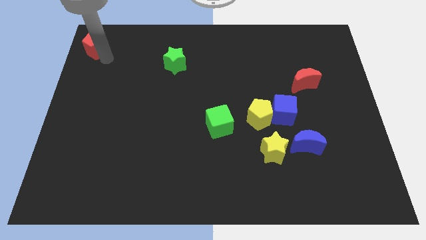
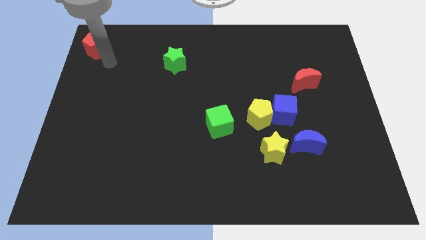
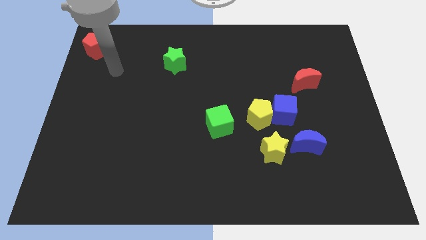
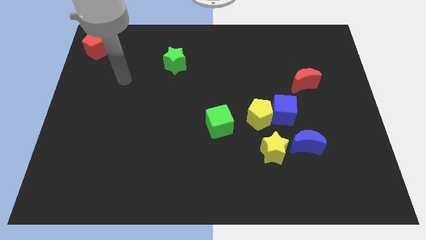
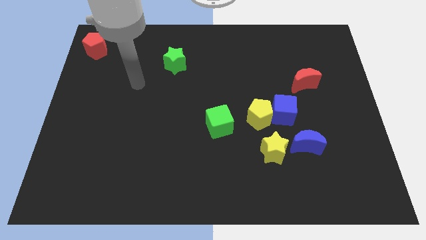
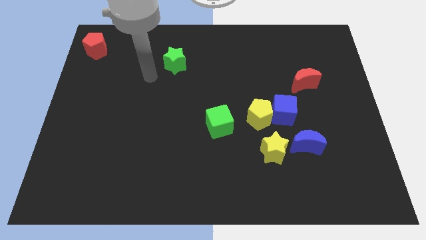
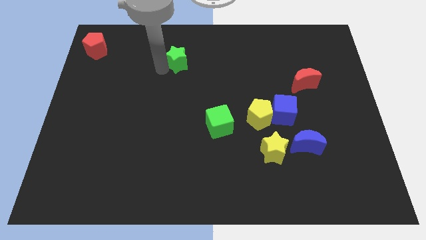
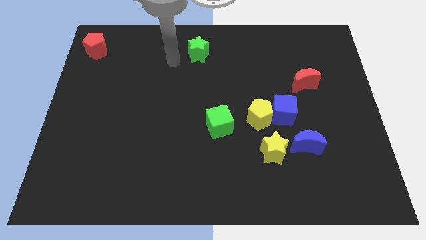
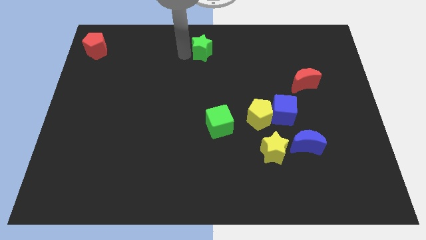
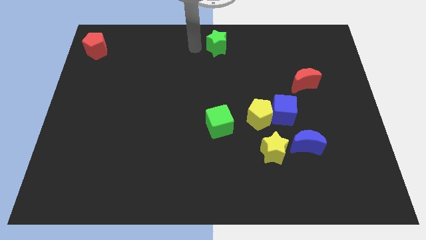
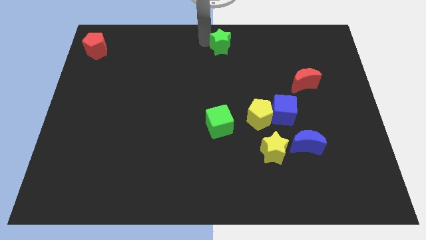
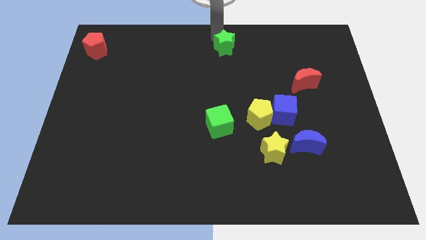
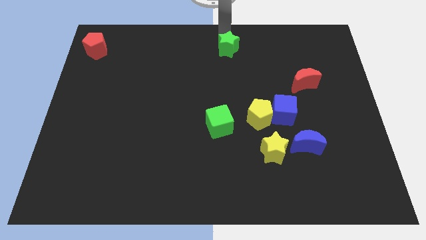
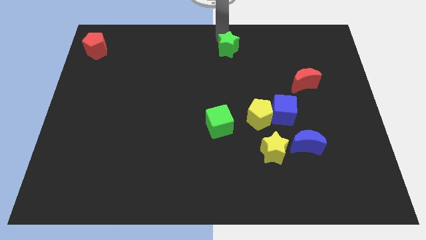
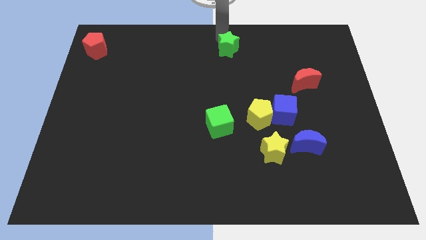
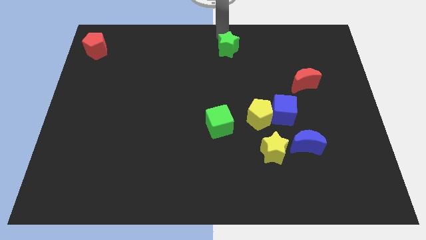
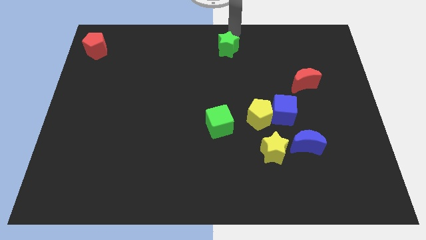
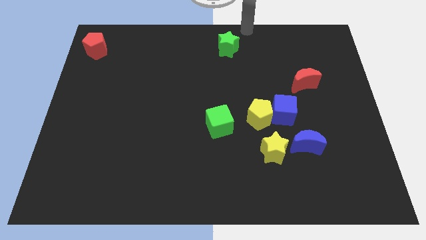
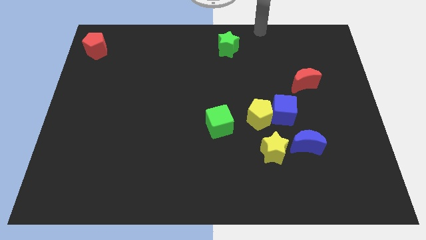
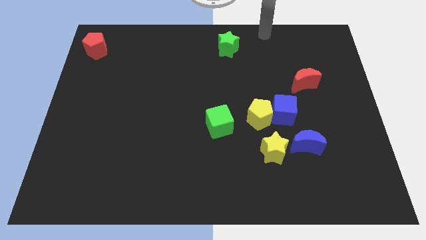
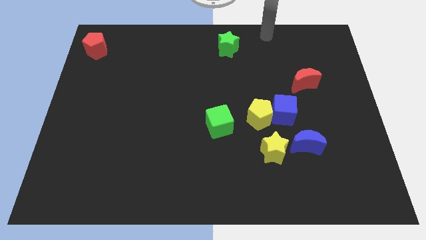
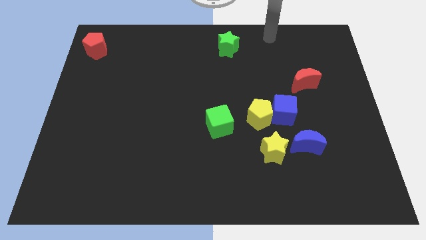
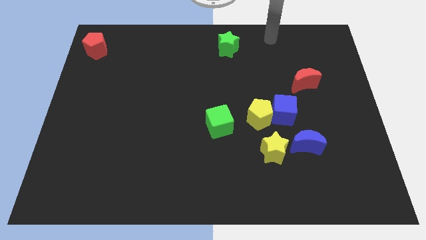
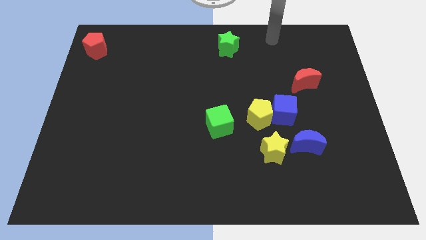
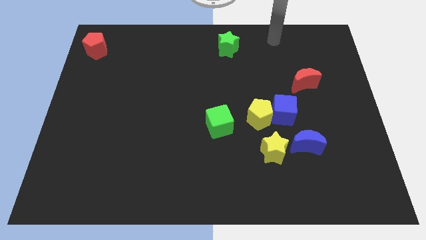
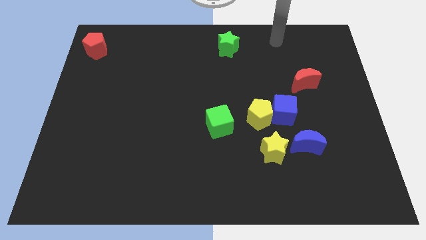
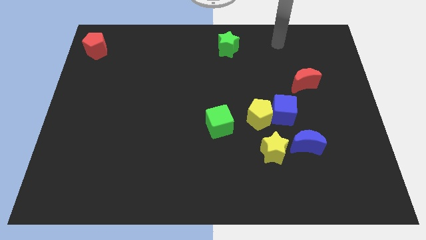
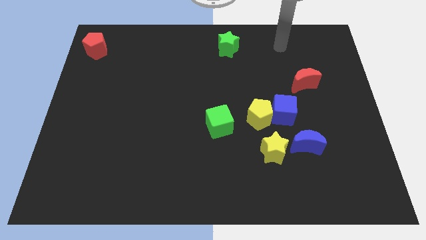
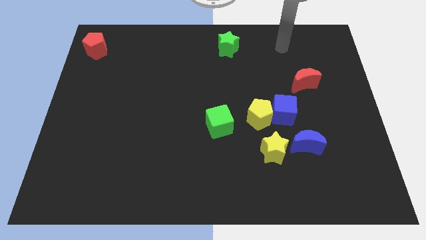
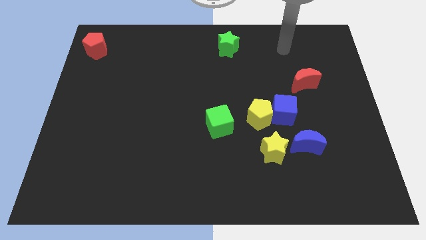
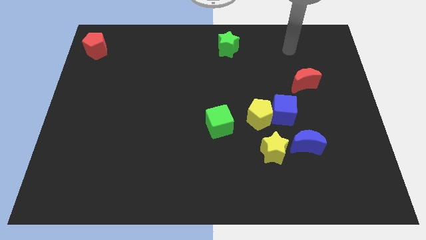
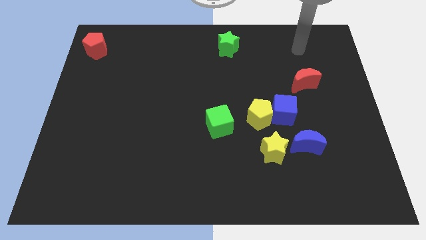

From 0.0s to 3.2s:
put the green star and the red pentagon in a line horizontally

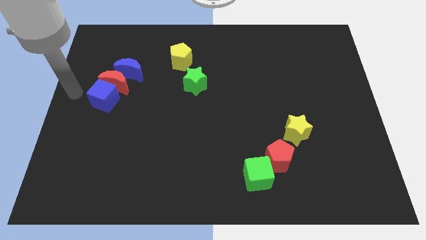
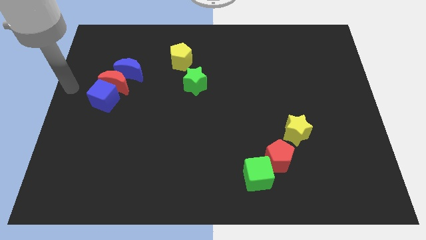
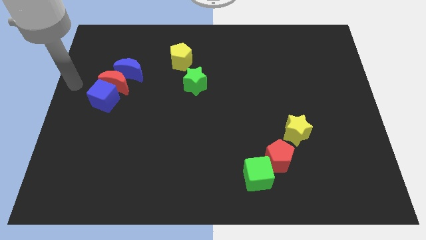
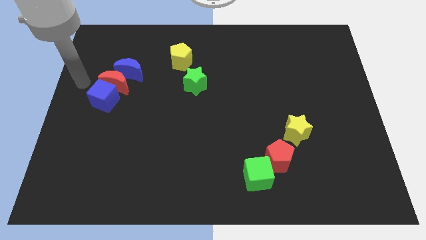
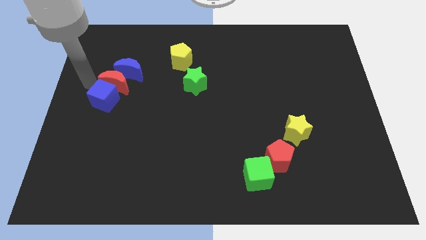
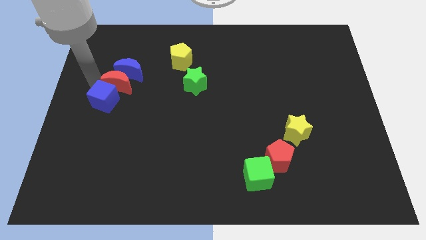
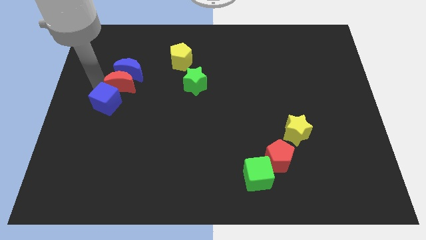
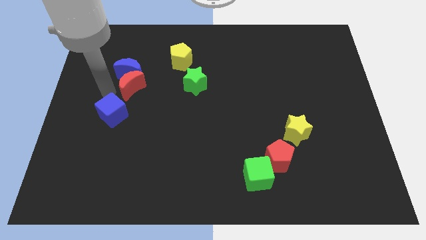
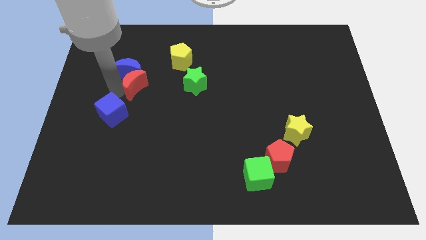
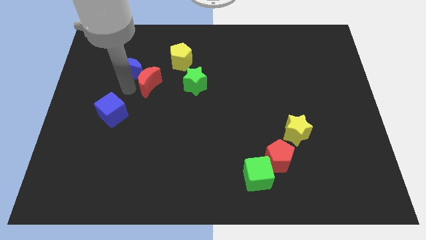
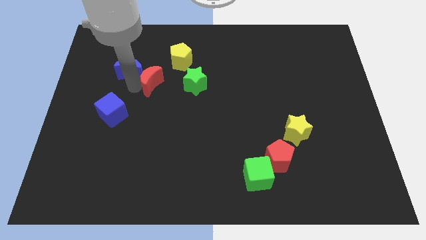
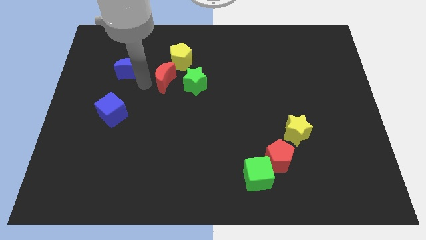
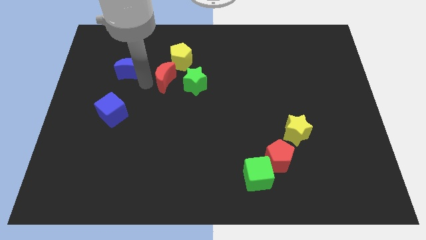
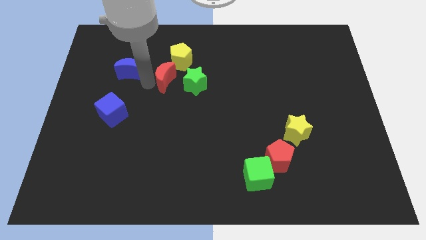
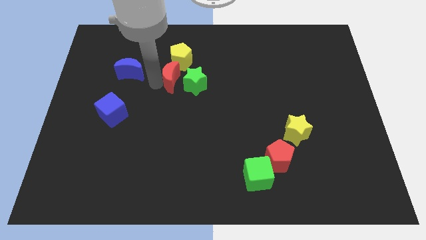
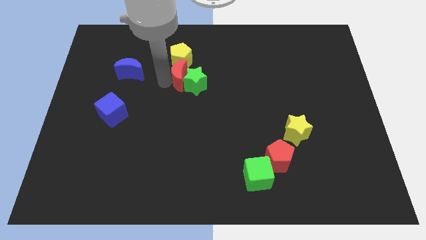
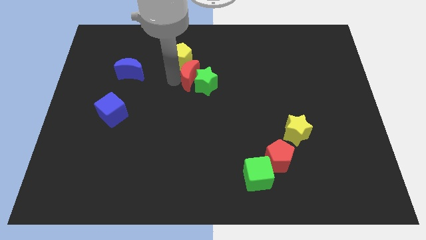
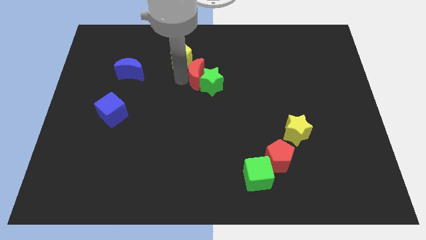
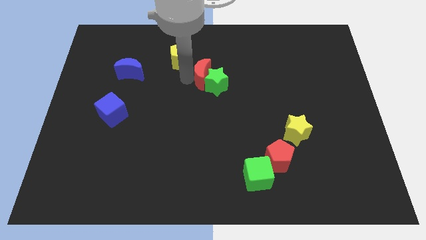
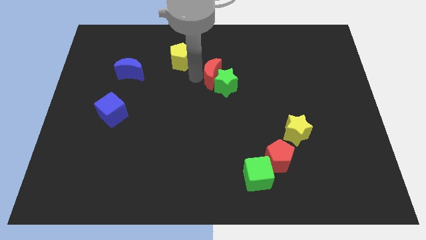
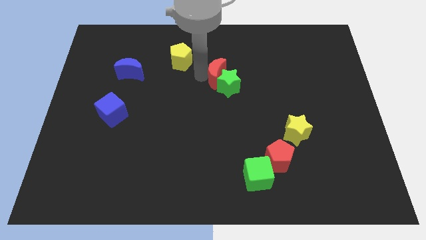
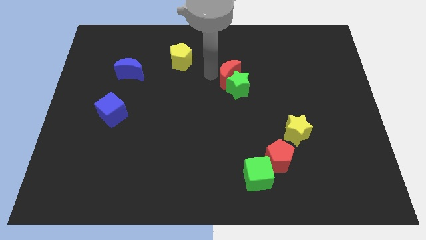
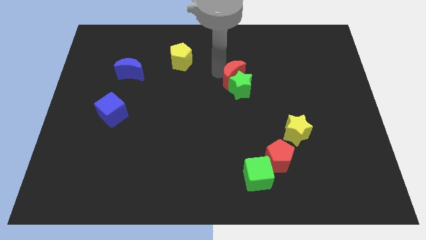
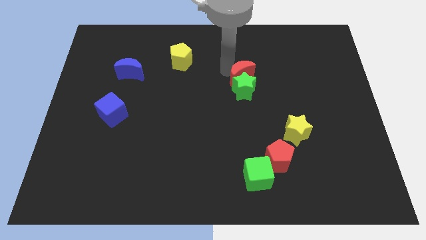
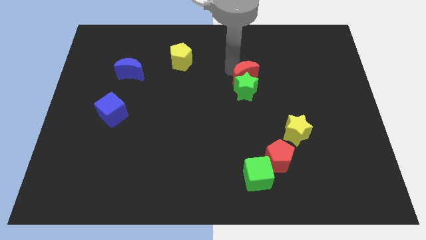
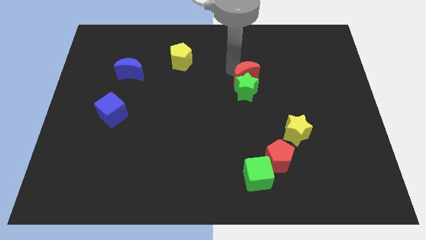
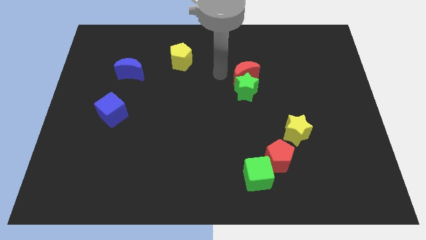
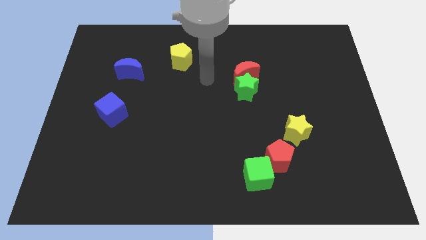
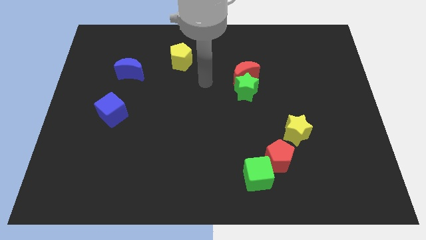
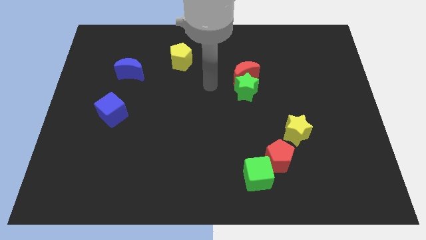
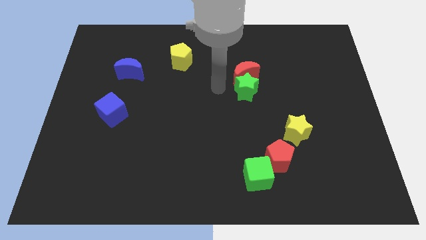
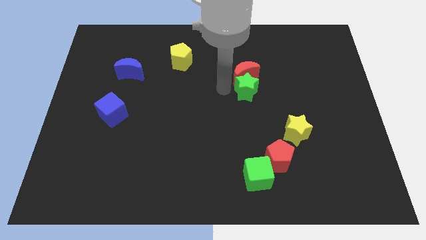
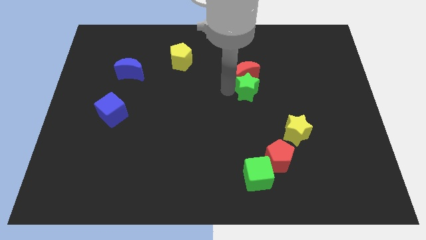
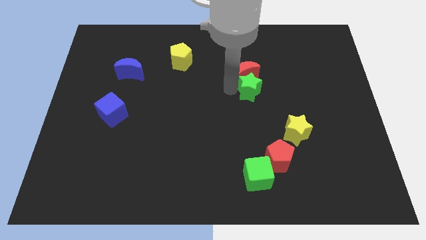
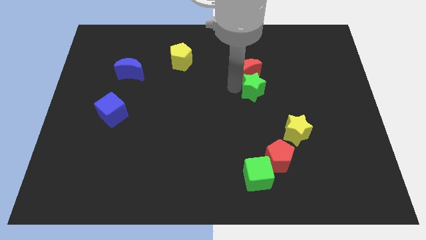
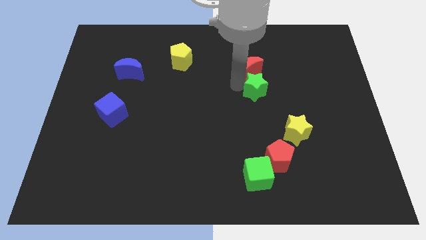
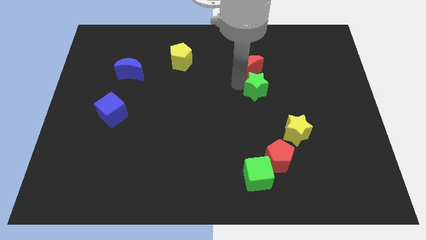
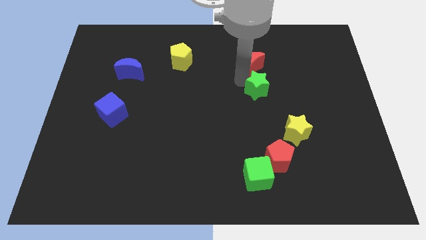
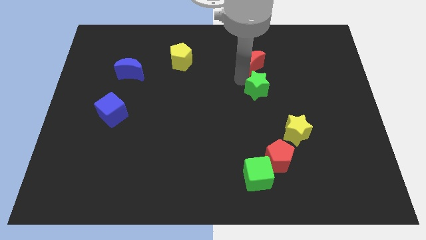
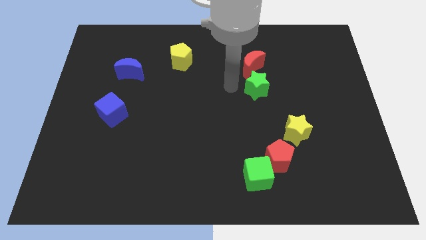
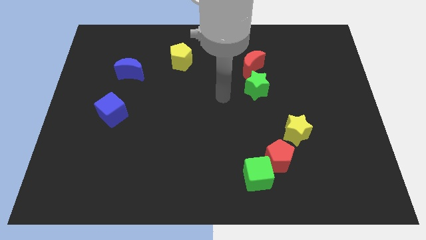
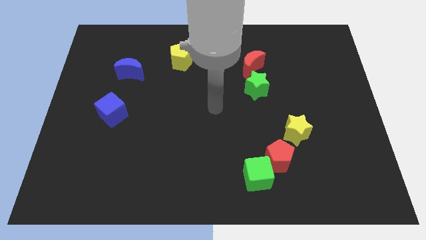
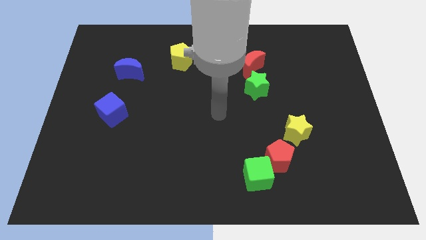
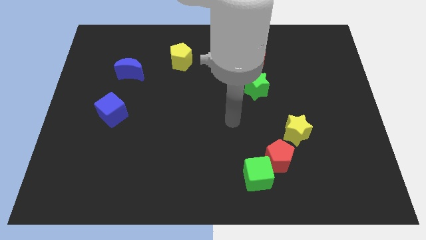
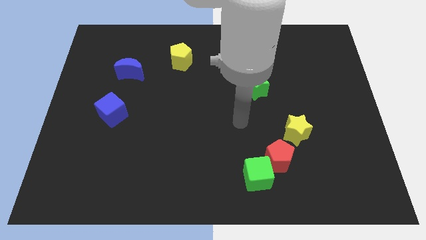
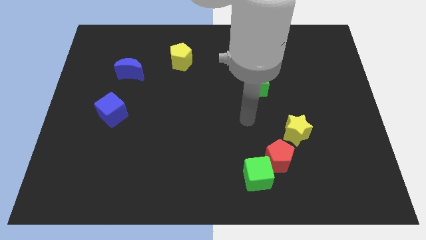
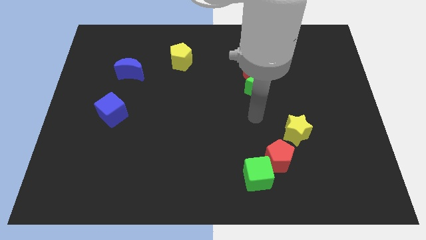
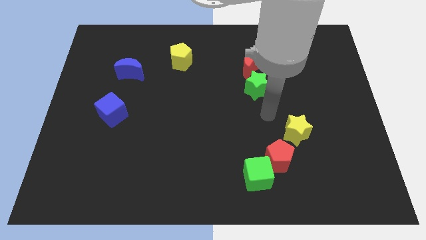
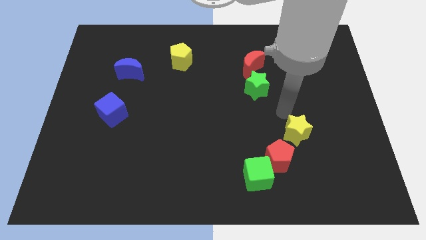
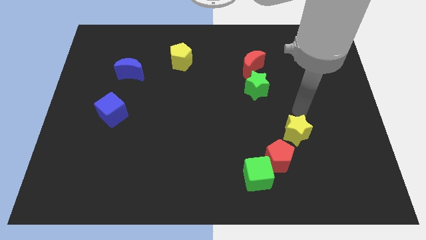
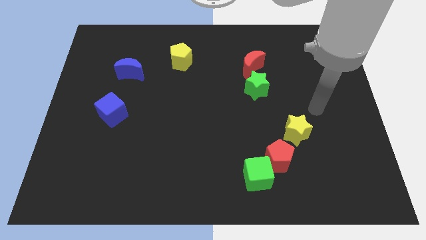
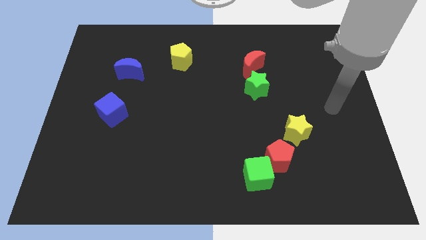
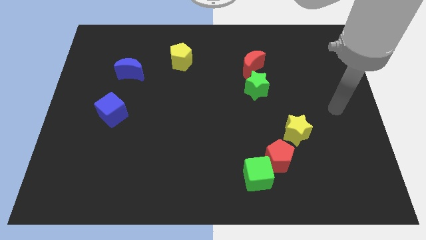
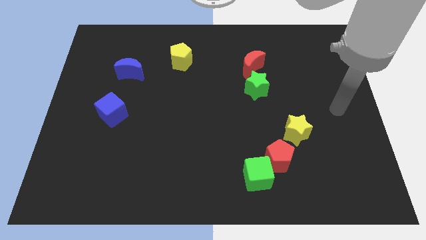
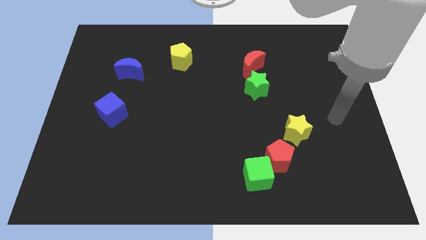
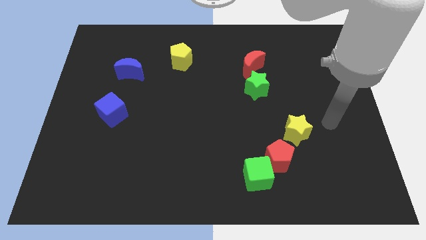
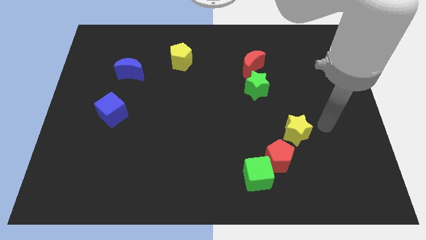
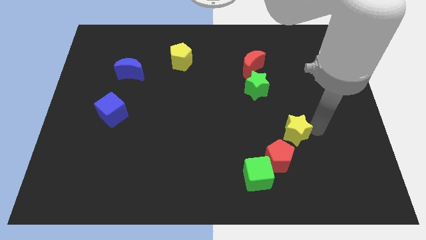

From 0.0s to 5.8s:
push the red moon and the star towards the right side of the board
